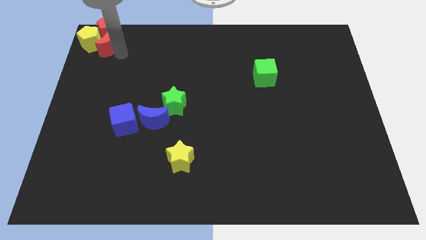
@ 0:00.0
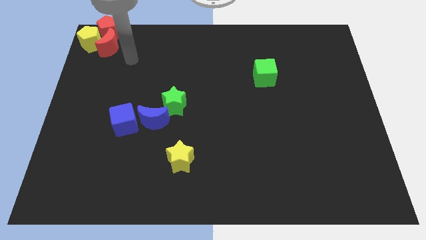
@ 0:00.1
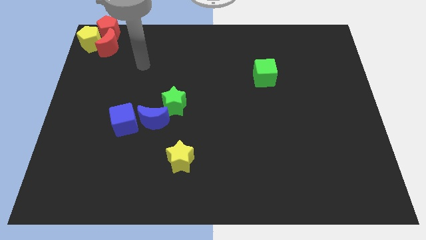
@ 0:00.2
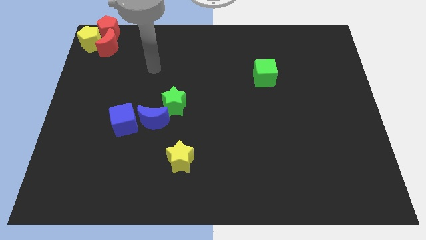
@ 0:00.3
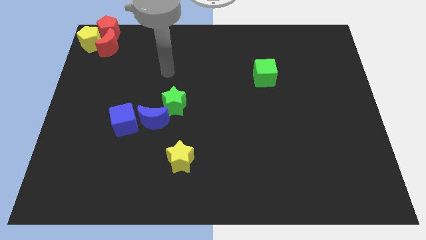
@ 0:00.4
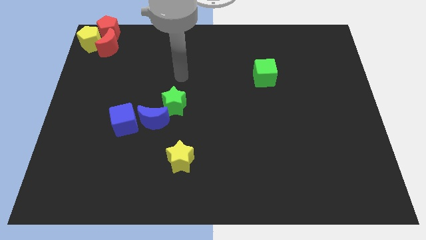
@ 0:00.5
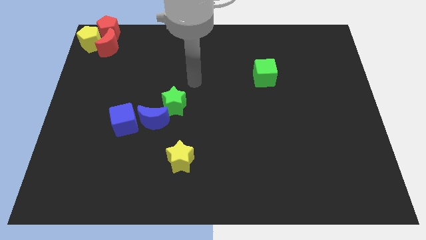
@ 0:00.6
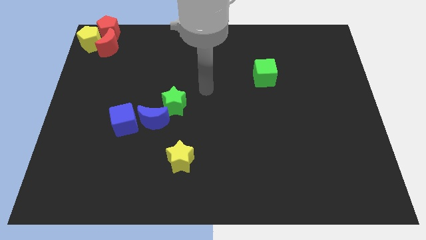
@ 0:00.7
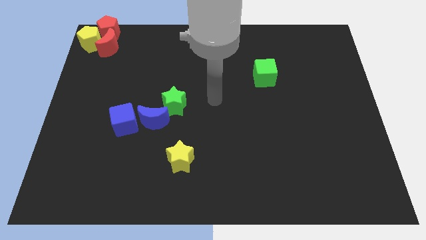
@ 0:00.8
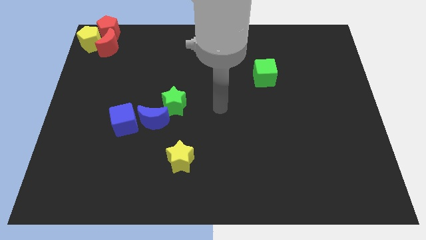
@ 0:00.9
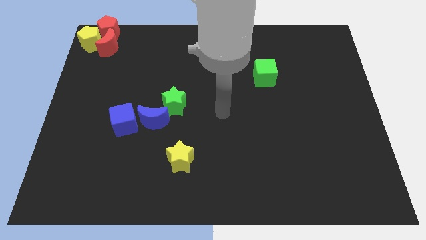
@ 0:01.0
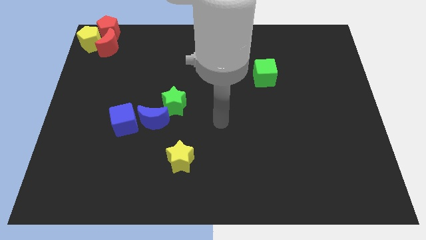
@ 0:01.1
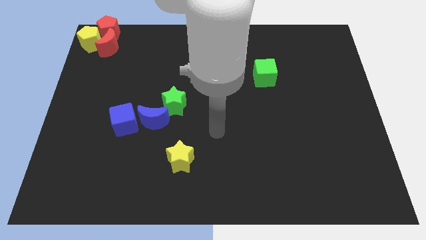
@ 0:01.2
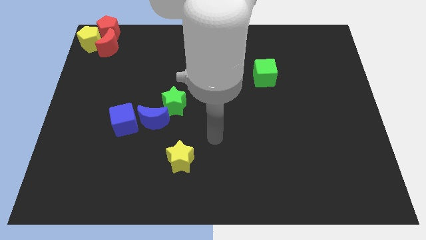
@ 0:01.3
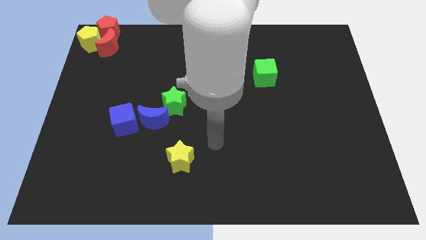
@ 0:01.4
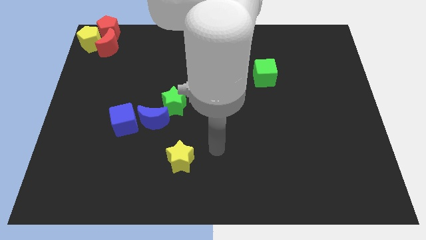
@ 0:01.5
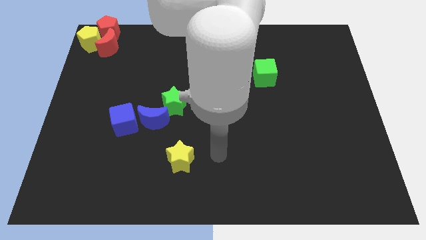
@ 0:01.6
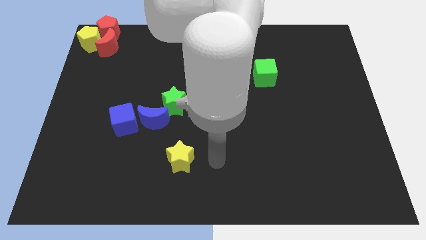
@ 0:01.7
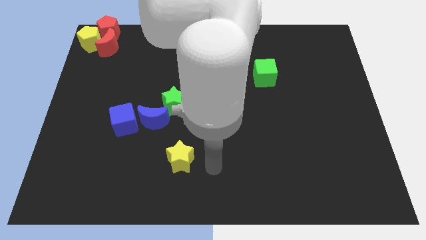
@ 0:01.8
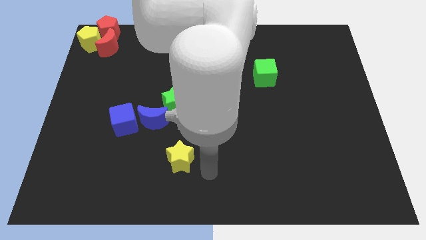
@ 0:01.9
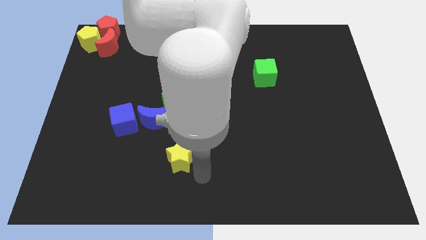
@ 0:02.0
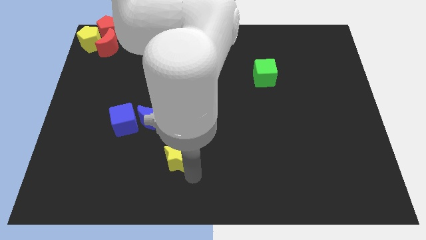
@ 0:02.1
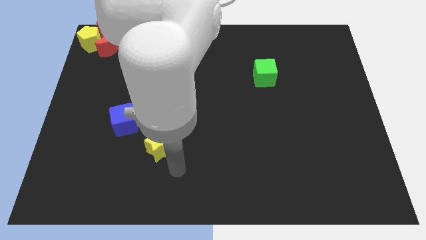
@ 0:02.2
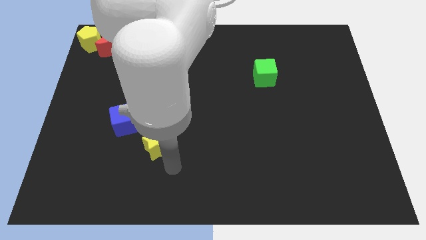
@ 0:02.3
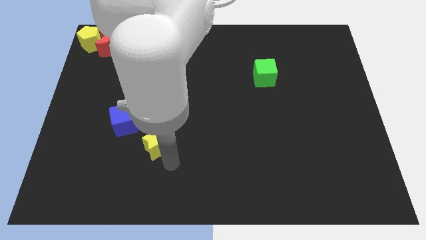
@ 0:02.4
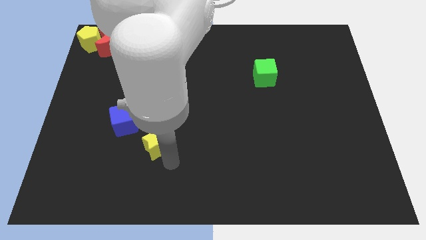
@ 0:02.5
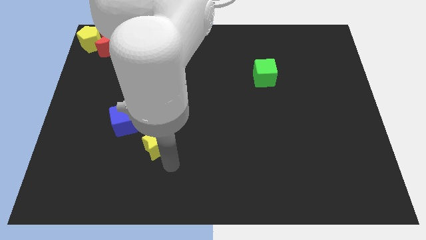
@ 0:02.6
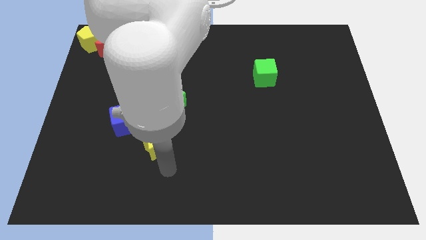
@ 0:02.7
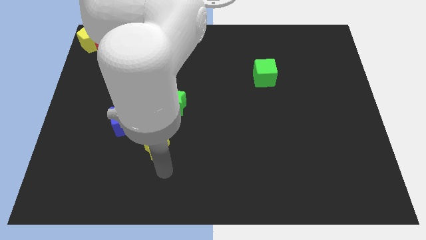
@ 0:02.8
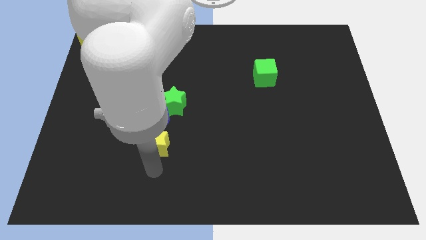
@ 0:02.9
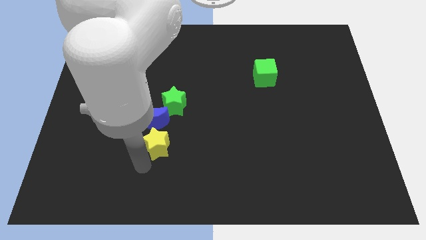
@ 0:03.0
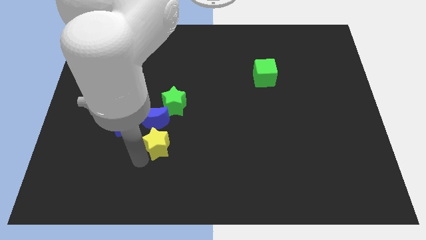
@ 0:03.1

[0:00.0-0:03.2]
place yellow star to the bottom of blue moon

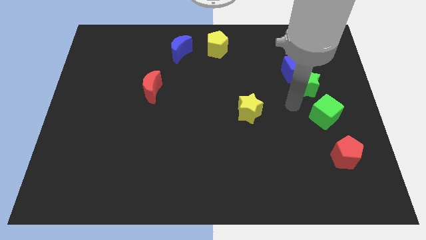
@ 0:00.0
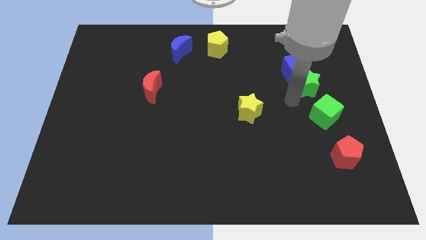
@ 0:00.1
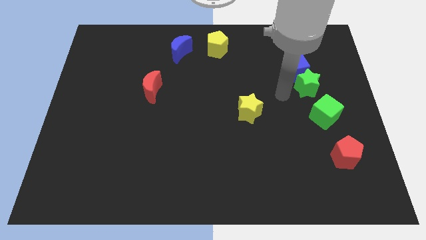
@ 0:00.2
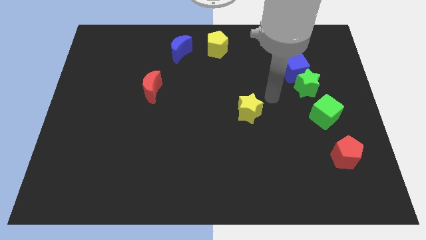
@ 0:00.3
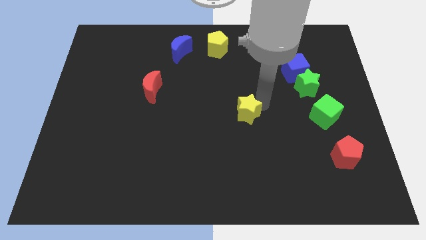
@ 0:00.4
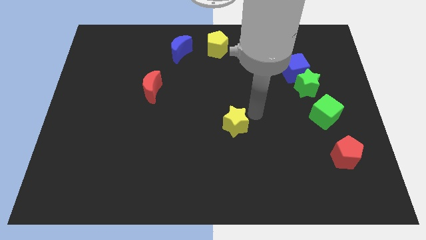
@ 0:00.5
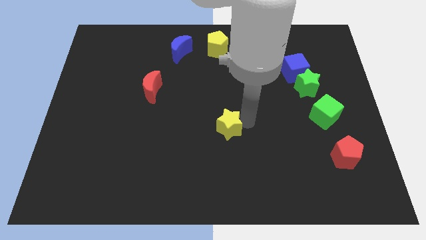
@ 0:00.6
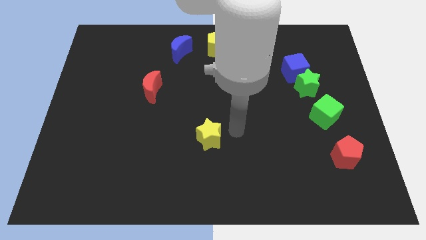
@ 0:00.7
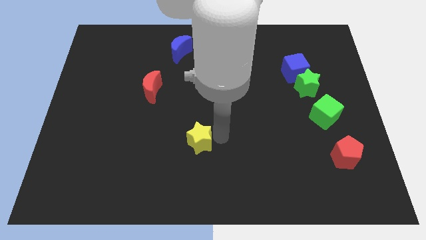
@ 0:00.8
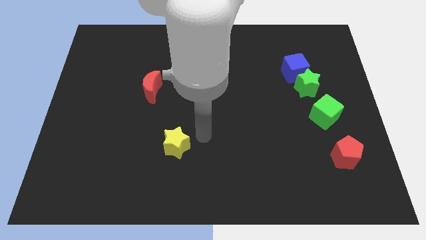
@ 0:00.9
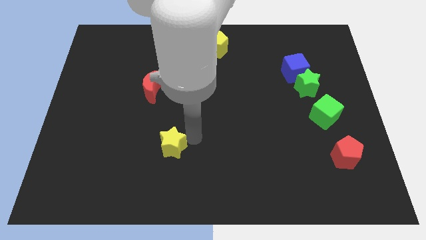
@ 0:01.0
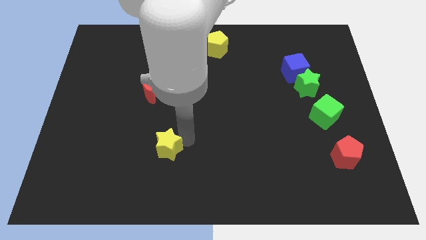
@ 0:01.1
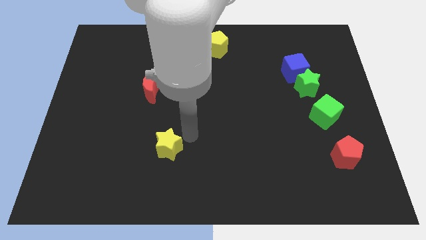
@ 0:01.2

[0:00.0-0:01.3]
push the yellow star towards the bottom side of the board

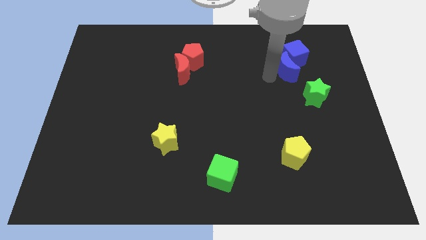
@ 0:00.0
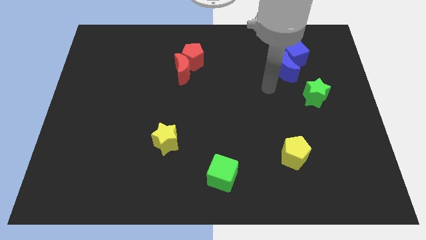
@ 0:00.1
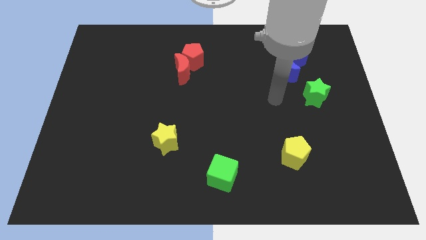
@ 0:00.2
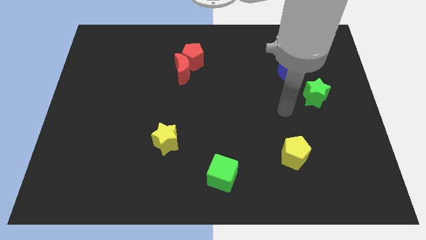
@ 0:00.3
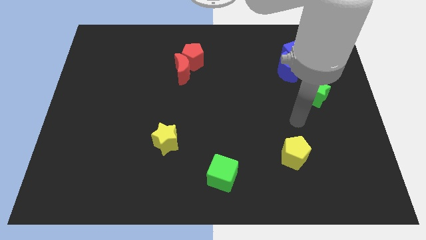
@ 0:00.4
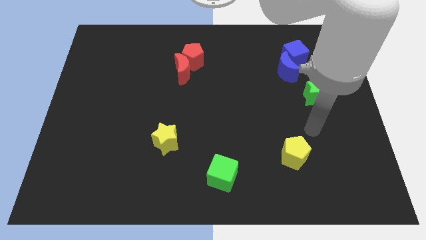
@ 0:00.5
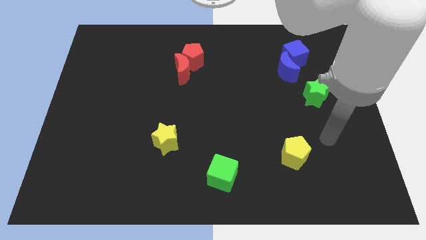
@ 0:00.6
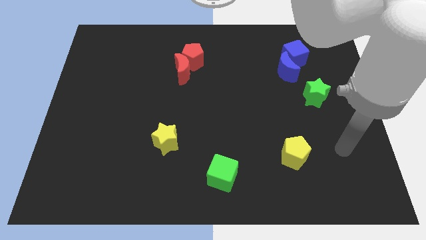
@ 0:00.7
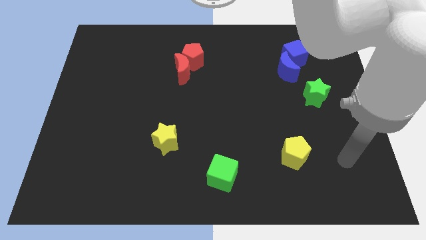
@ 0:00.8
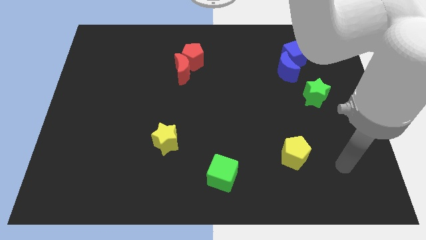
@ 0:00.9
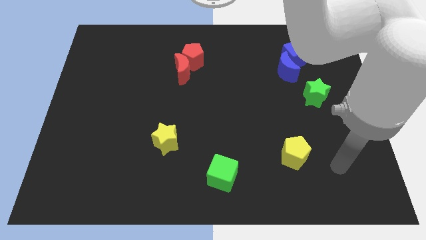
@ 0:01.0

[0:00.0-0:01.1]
move your arm away from the blue moon

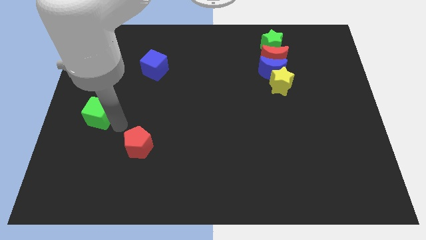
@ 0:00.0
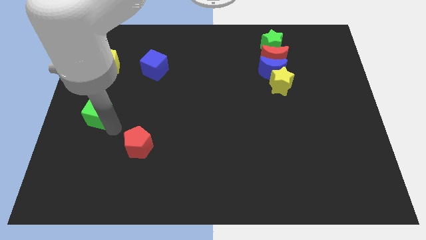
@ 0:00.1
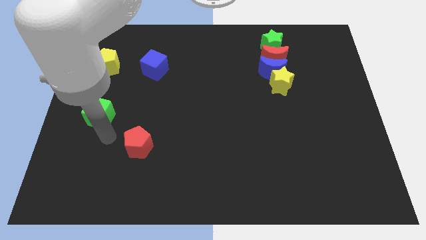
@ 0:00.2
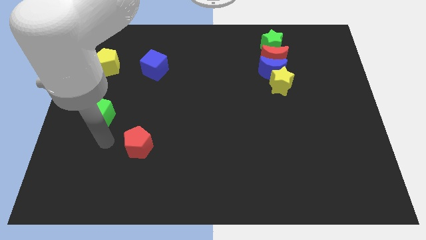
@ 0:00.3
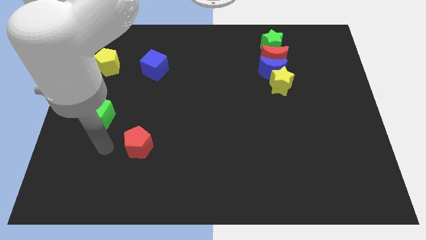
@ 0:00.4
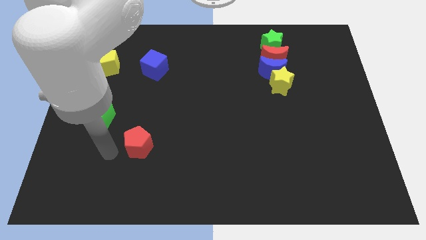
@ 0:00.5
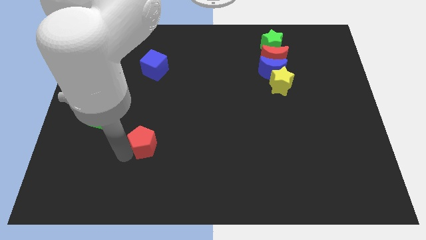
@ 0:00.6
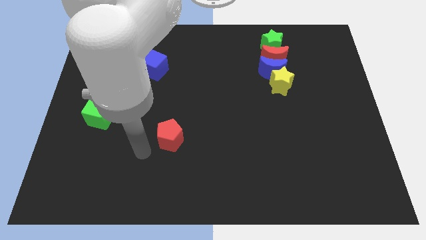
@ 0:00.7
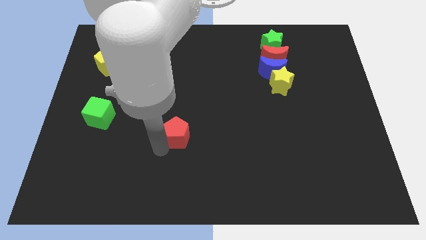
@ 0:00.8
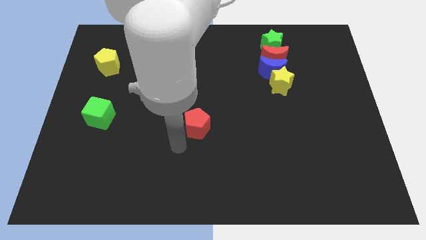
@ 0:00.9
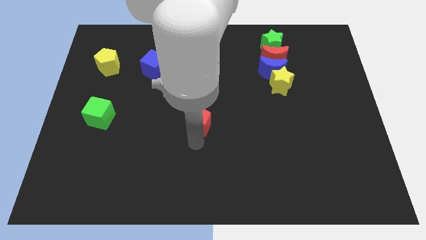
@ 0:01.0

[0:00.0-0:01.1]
move the red pentagon to the center of the board

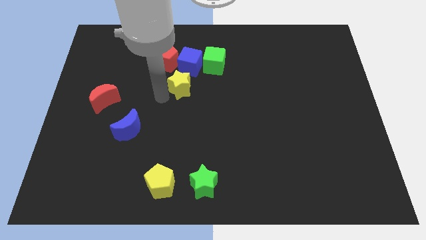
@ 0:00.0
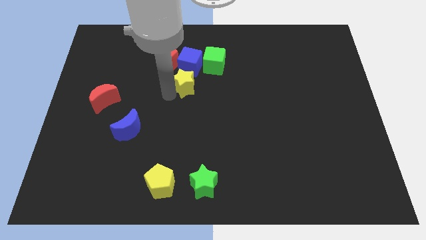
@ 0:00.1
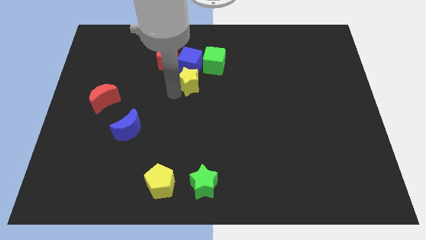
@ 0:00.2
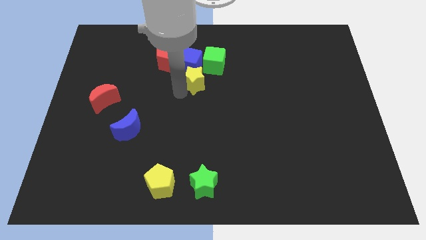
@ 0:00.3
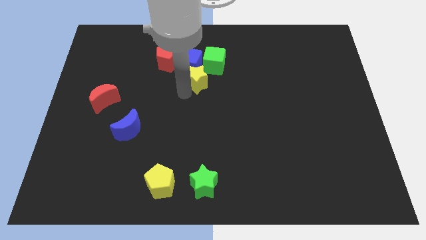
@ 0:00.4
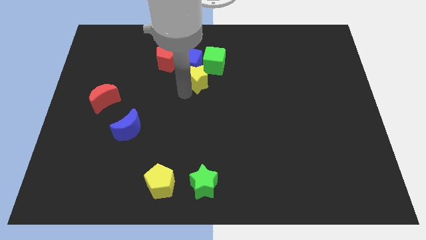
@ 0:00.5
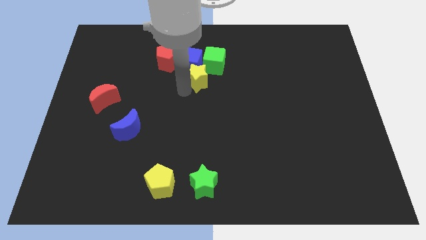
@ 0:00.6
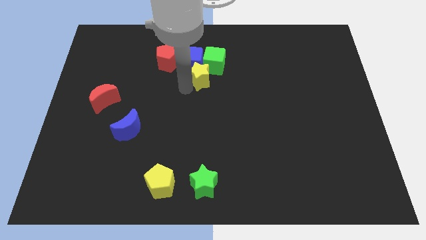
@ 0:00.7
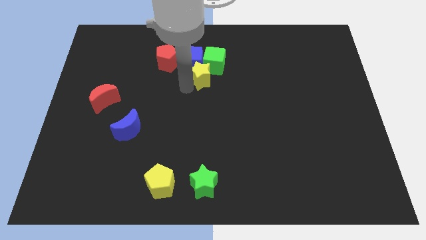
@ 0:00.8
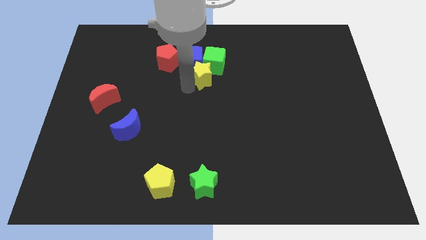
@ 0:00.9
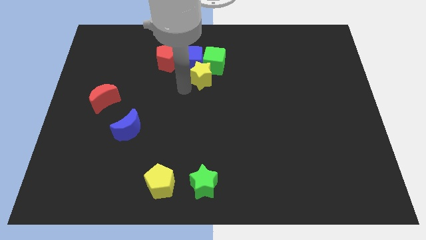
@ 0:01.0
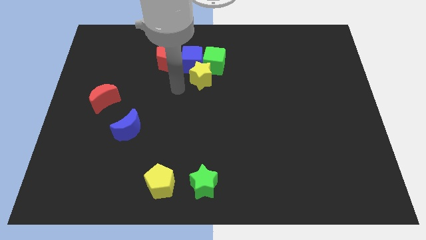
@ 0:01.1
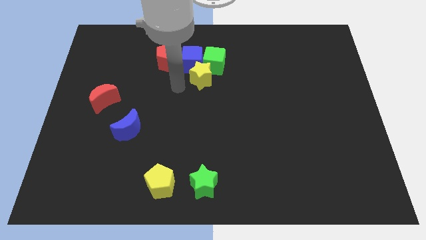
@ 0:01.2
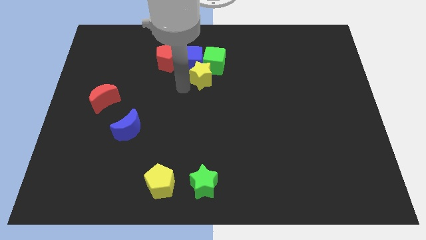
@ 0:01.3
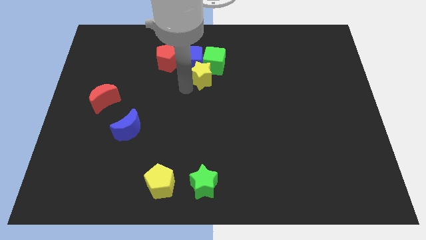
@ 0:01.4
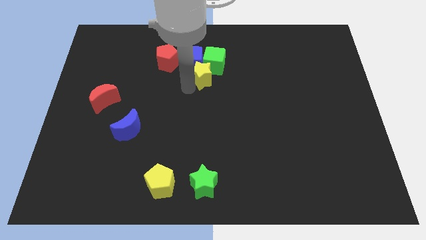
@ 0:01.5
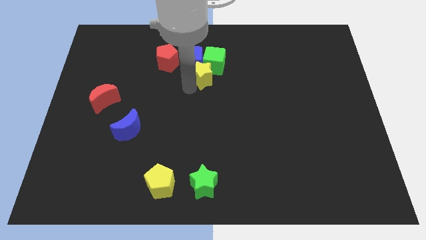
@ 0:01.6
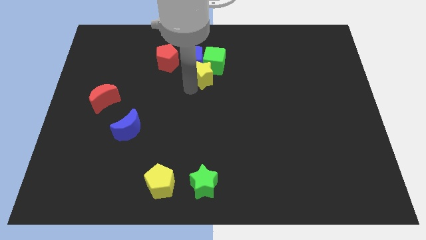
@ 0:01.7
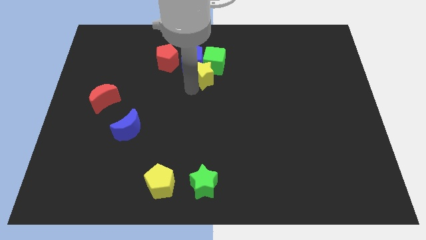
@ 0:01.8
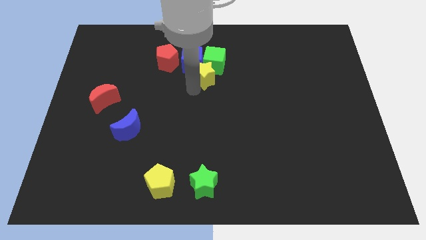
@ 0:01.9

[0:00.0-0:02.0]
push the yellow star into the green and blue cube
